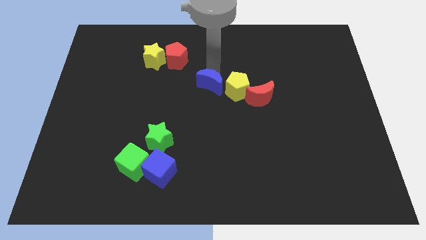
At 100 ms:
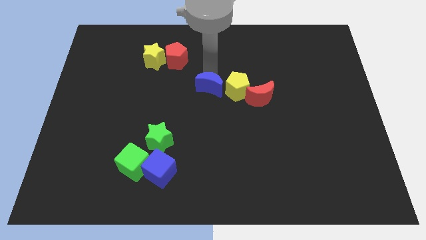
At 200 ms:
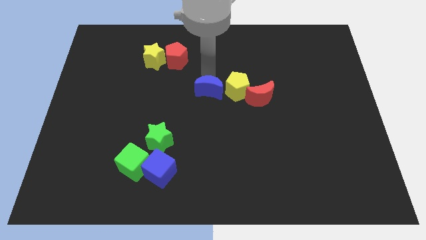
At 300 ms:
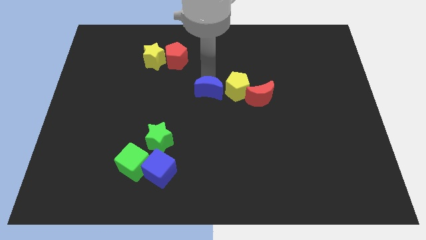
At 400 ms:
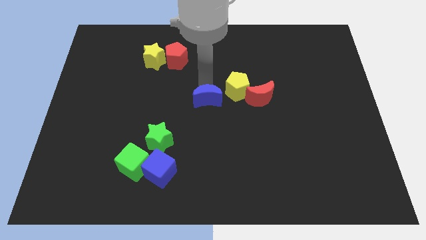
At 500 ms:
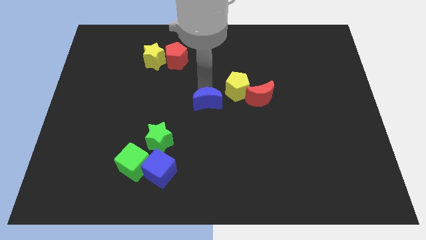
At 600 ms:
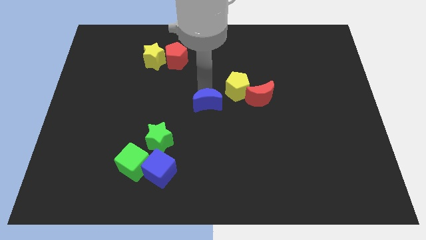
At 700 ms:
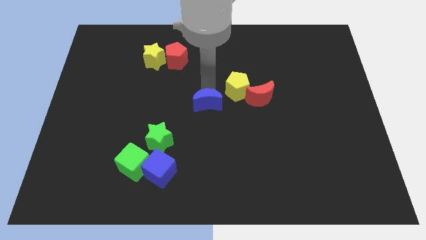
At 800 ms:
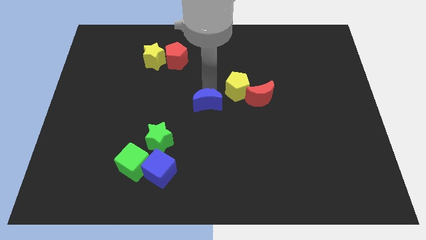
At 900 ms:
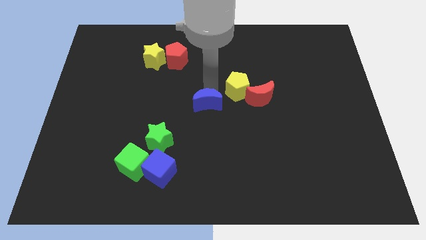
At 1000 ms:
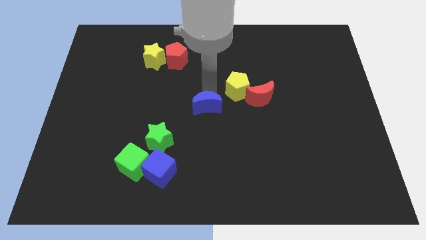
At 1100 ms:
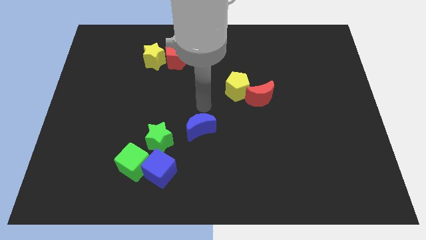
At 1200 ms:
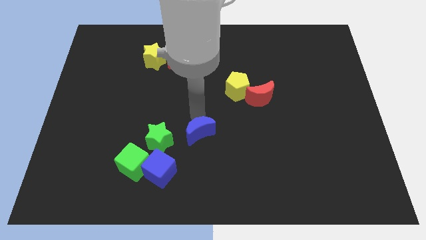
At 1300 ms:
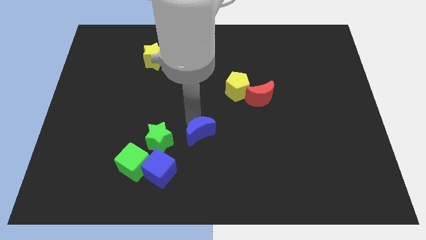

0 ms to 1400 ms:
slide the blue crescent slightly towards down

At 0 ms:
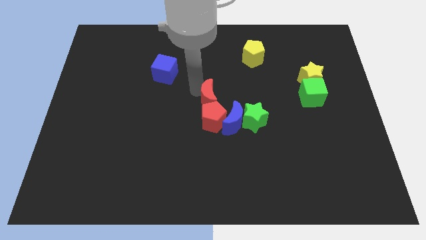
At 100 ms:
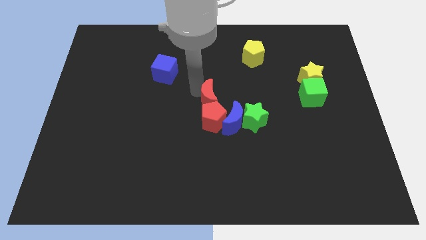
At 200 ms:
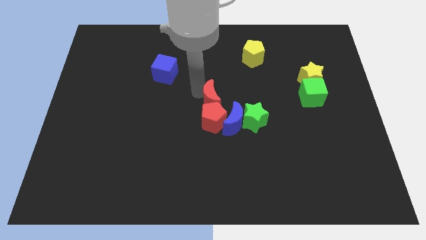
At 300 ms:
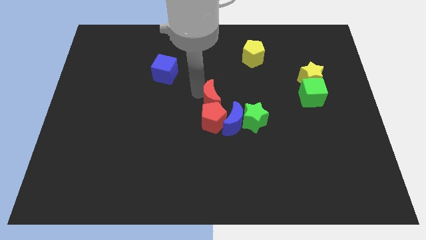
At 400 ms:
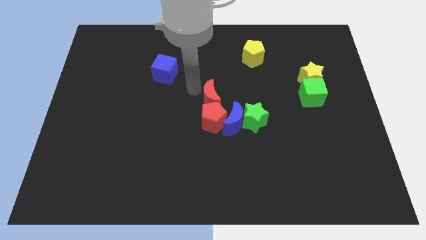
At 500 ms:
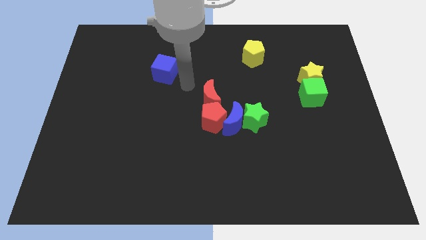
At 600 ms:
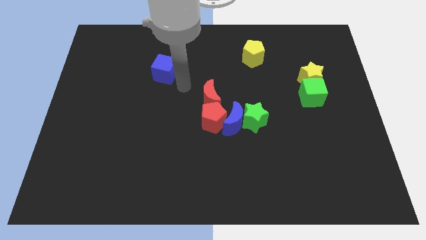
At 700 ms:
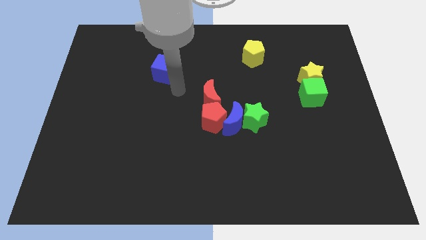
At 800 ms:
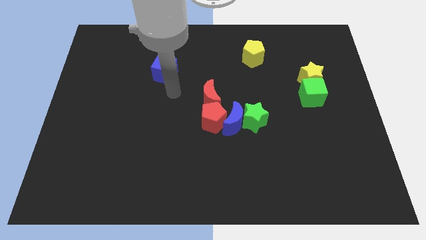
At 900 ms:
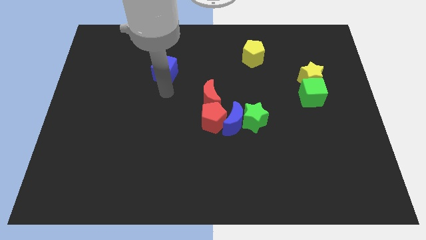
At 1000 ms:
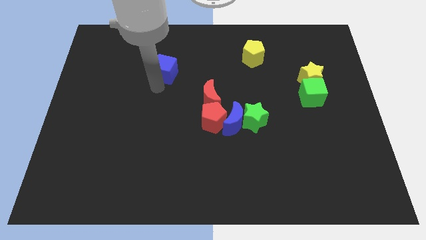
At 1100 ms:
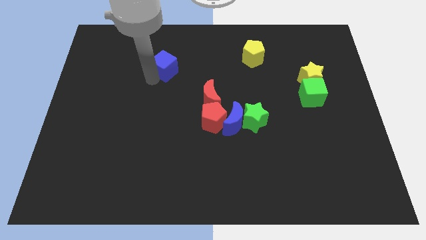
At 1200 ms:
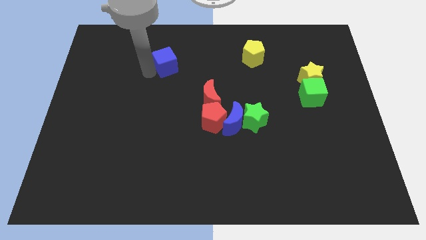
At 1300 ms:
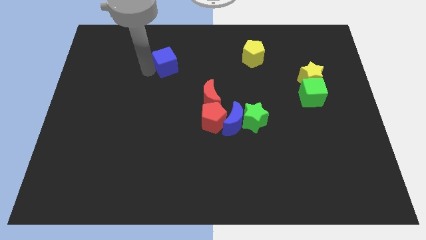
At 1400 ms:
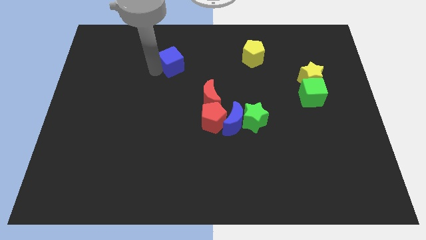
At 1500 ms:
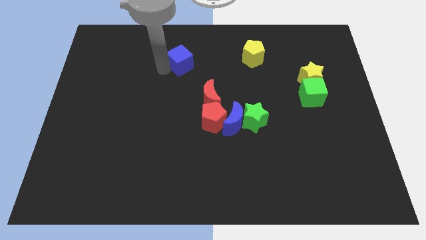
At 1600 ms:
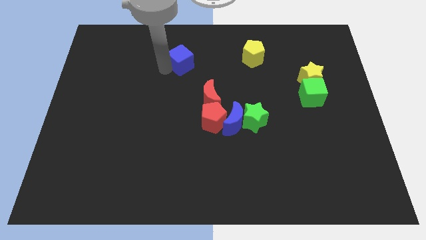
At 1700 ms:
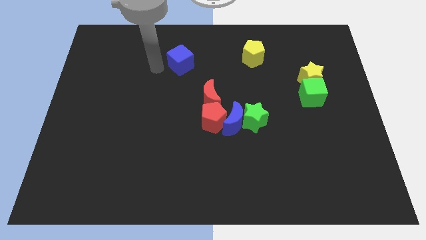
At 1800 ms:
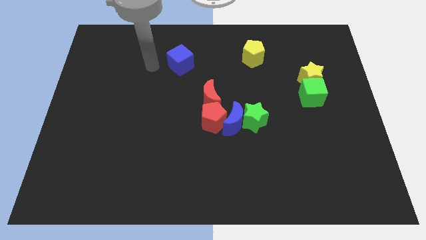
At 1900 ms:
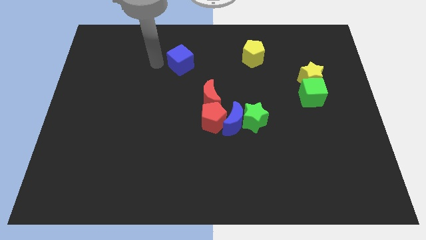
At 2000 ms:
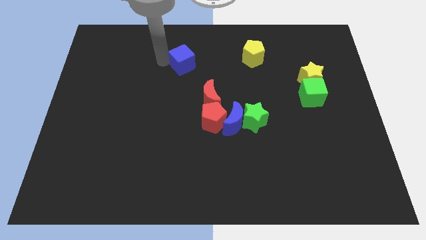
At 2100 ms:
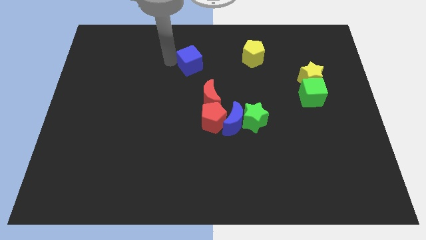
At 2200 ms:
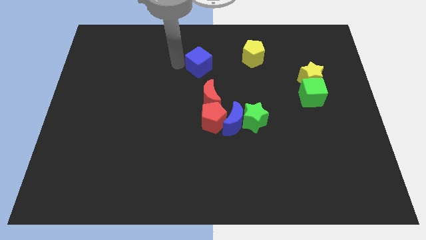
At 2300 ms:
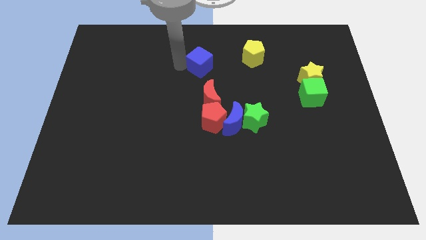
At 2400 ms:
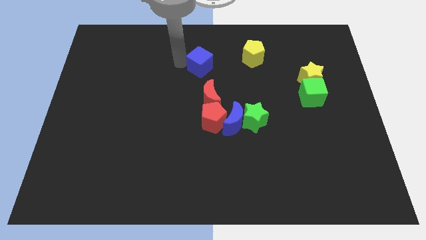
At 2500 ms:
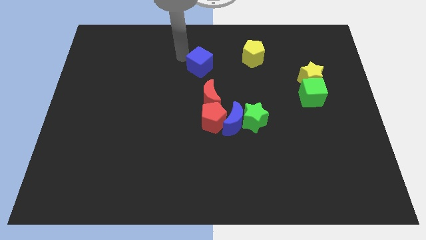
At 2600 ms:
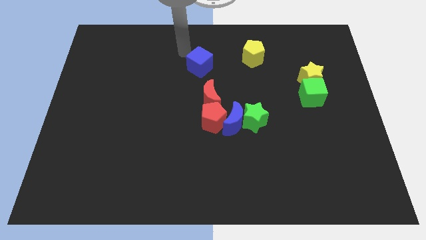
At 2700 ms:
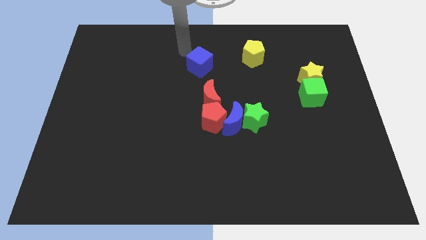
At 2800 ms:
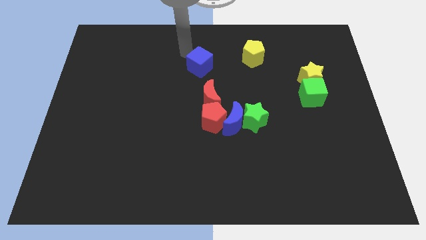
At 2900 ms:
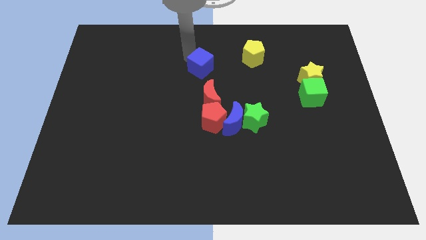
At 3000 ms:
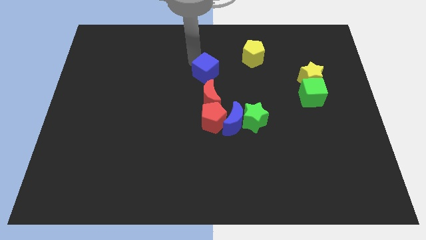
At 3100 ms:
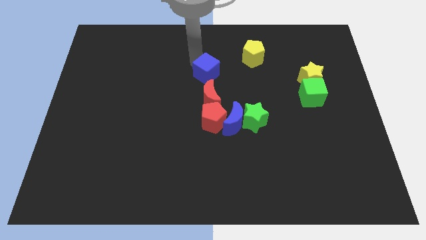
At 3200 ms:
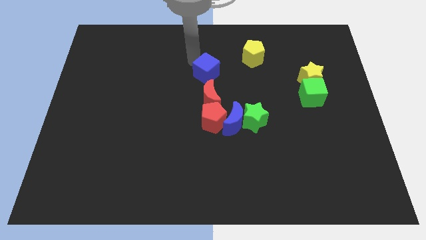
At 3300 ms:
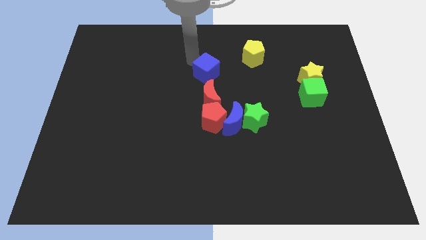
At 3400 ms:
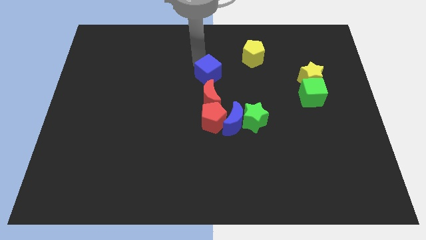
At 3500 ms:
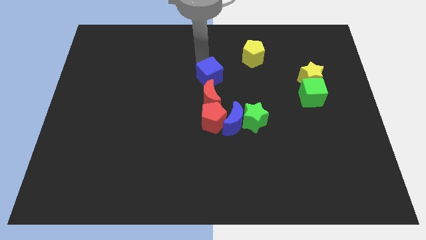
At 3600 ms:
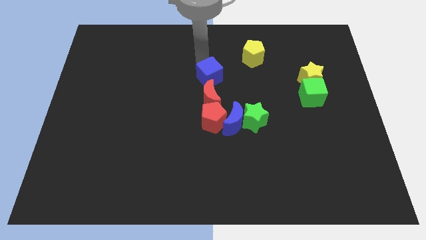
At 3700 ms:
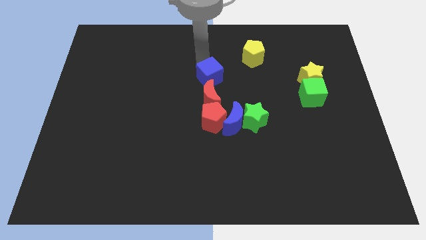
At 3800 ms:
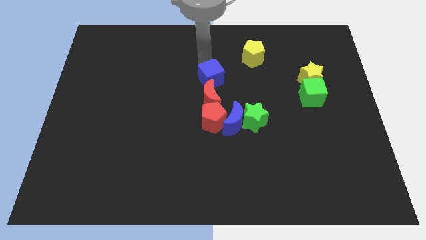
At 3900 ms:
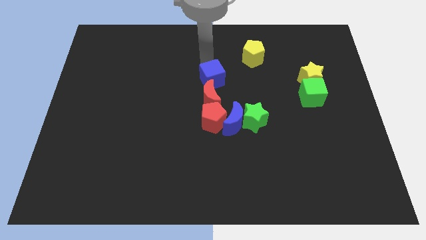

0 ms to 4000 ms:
place the blue cube above the red crescent

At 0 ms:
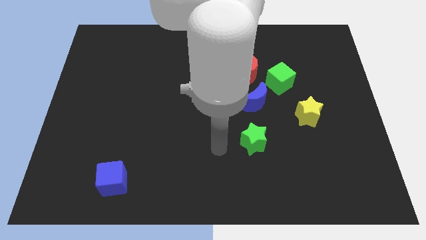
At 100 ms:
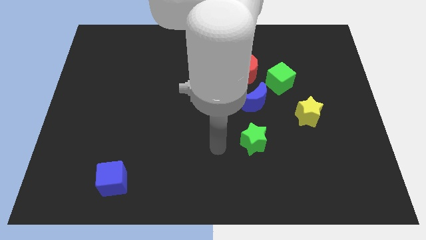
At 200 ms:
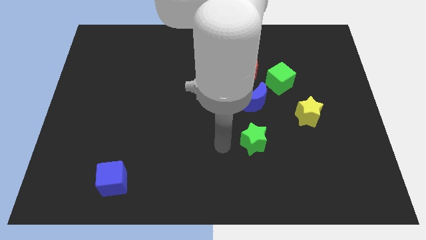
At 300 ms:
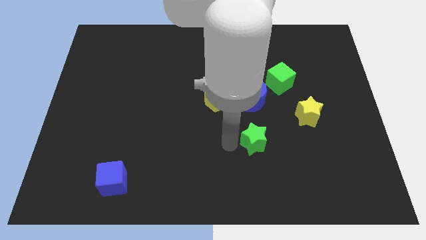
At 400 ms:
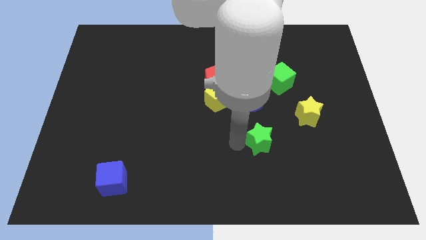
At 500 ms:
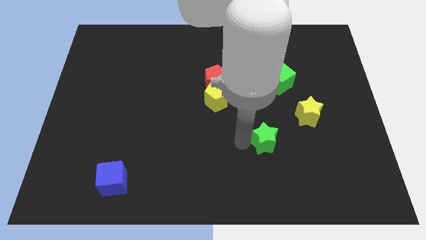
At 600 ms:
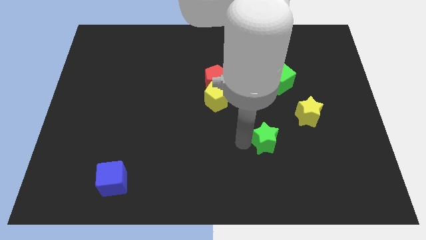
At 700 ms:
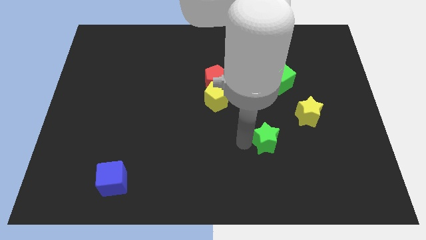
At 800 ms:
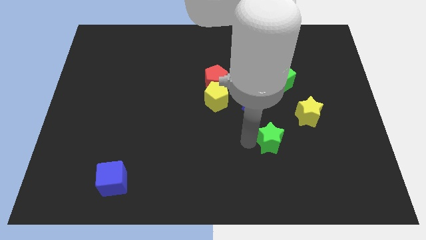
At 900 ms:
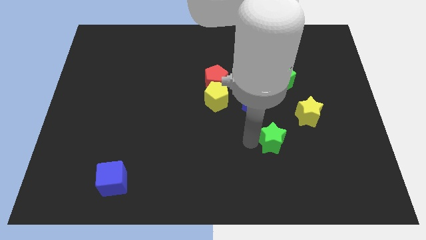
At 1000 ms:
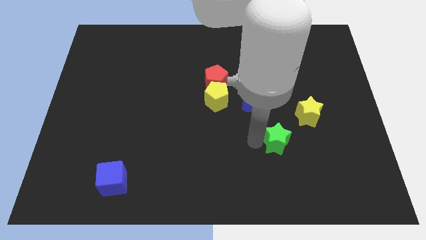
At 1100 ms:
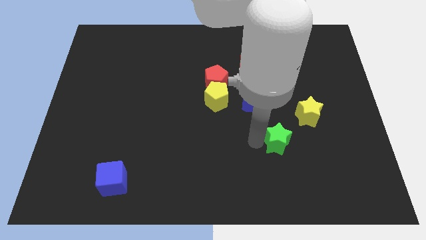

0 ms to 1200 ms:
place the green star diagonally bottom left to the yellow star

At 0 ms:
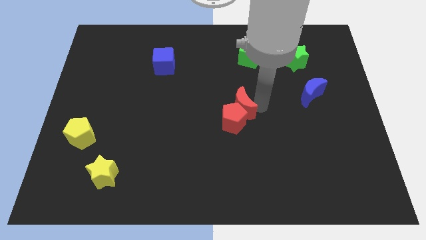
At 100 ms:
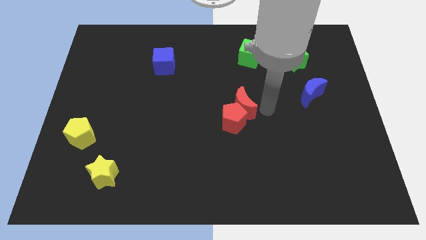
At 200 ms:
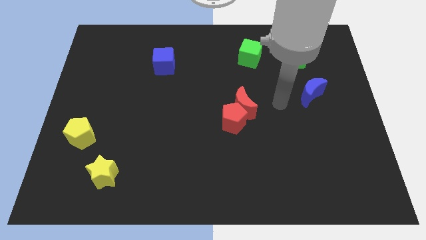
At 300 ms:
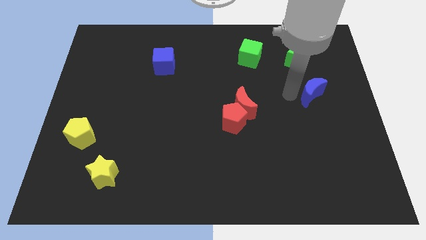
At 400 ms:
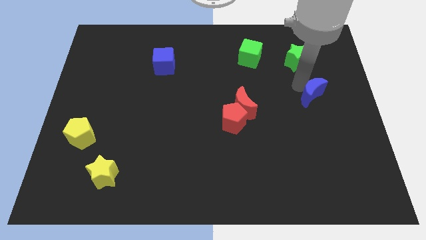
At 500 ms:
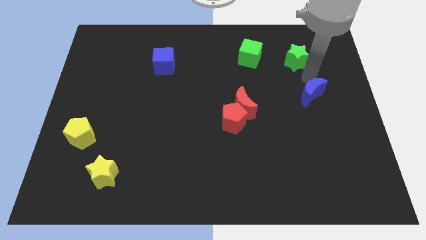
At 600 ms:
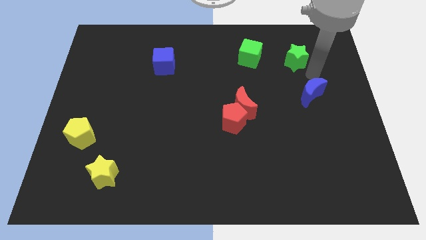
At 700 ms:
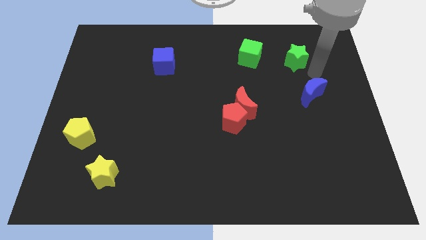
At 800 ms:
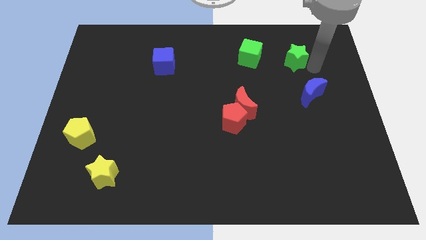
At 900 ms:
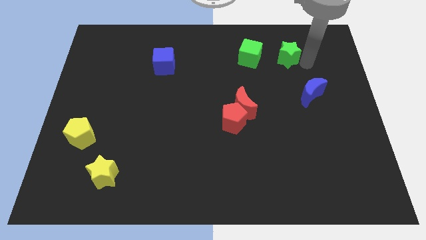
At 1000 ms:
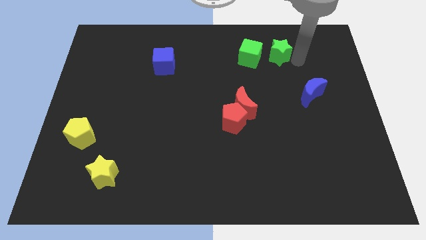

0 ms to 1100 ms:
push green star towards green cube

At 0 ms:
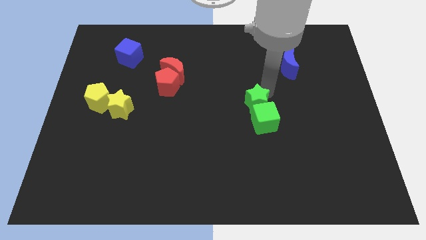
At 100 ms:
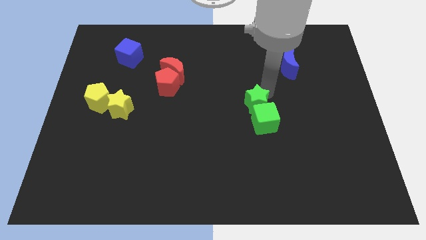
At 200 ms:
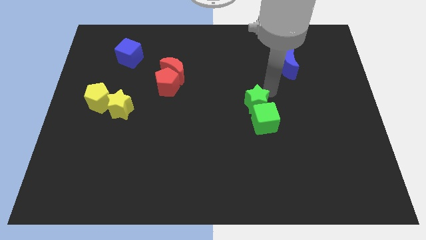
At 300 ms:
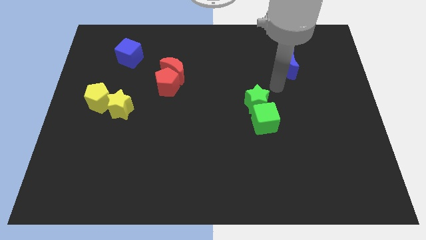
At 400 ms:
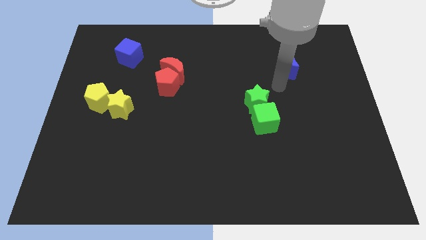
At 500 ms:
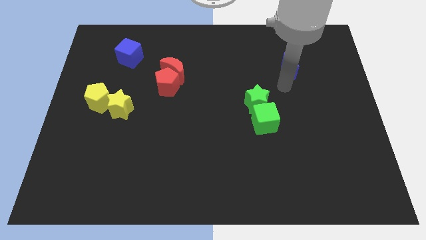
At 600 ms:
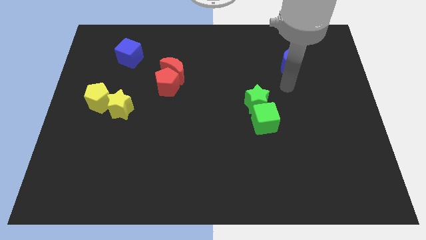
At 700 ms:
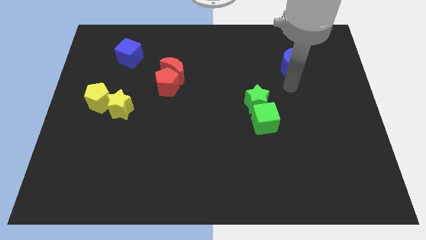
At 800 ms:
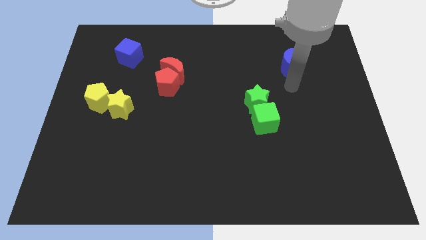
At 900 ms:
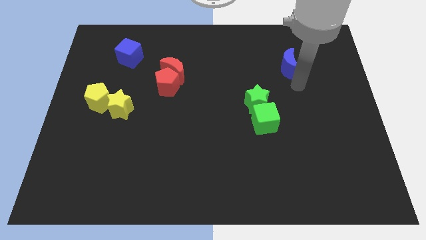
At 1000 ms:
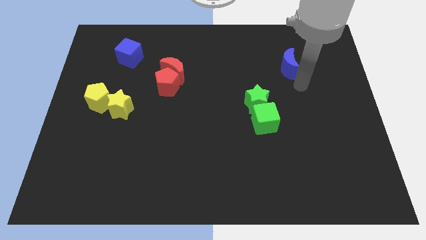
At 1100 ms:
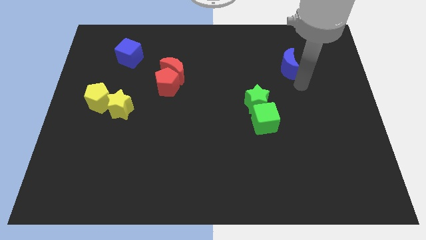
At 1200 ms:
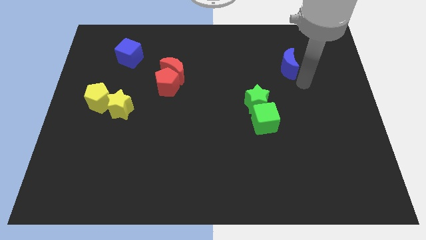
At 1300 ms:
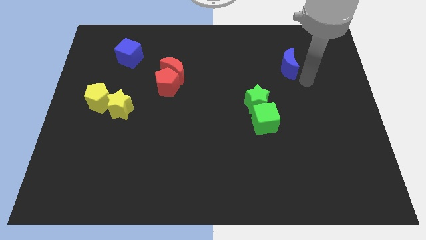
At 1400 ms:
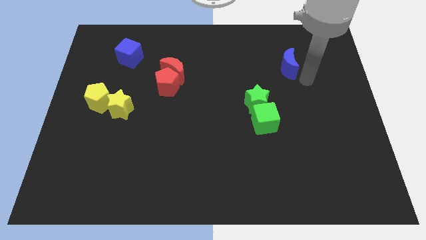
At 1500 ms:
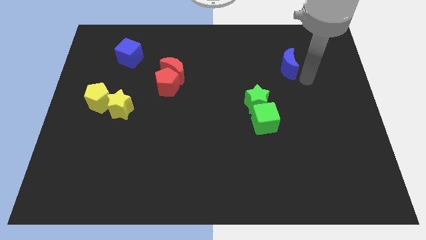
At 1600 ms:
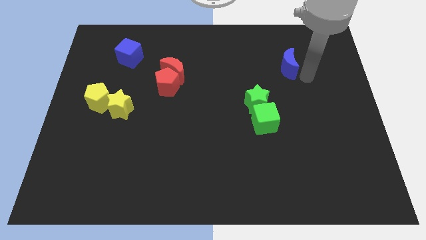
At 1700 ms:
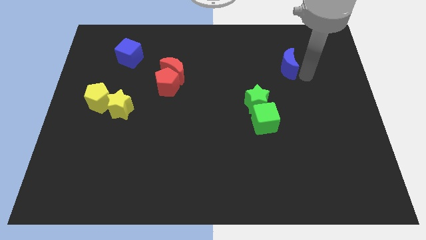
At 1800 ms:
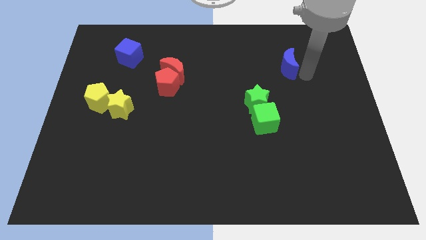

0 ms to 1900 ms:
move your arm to the right of blue crescent
